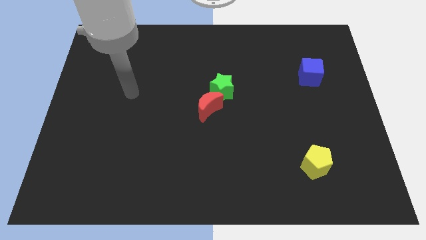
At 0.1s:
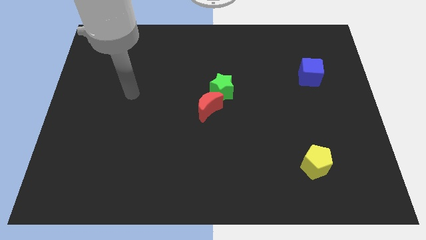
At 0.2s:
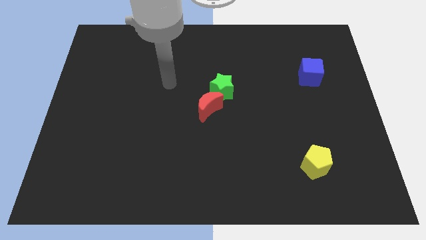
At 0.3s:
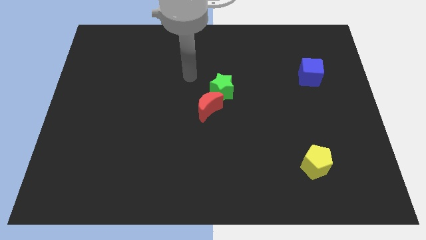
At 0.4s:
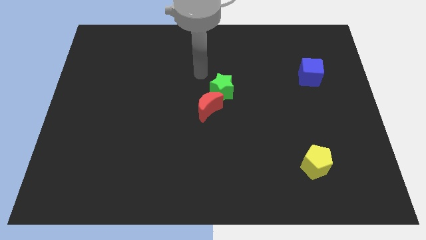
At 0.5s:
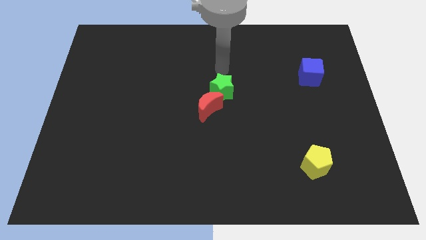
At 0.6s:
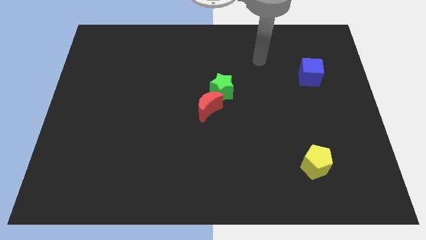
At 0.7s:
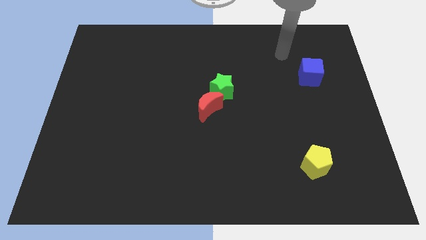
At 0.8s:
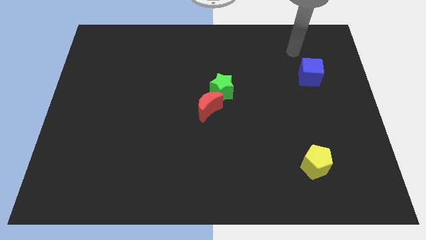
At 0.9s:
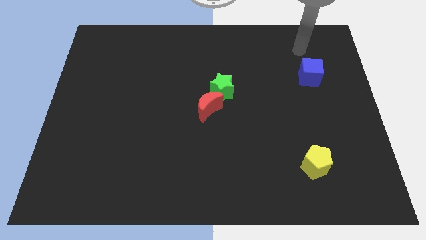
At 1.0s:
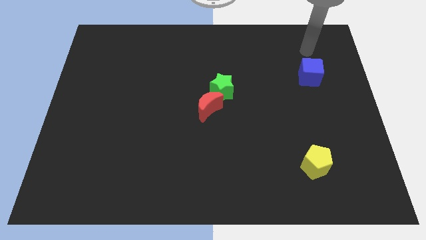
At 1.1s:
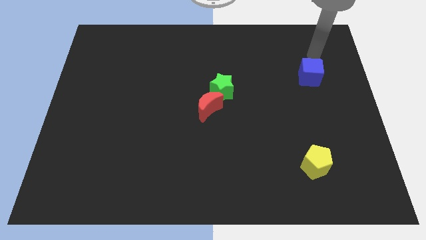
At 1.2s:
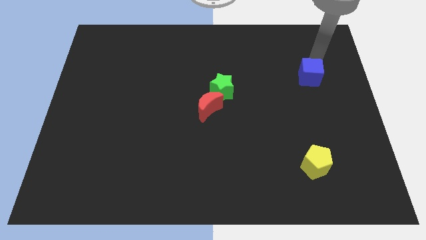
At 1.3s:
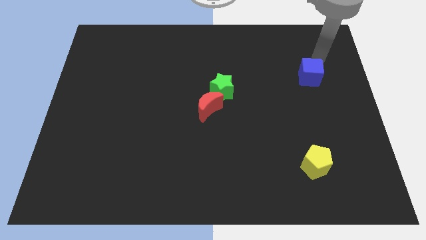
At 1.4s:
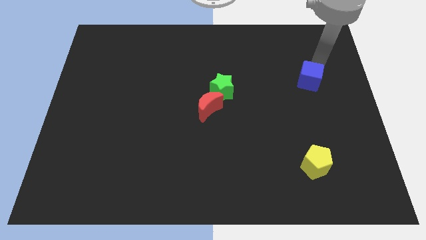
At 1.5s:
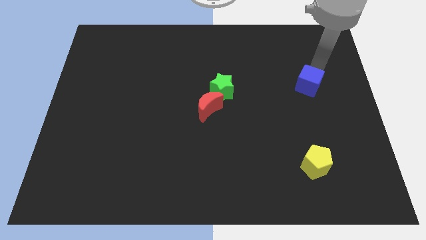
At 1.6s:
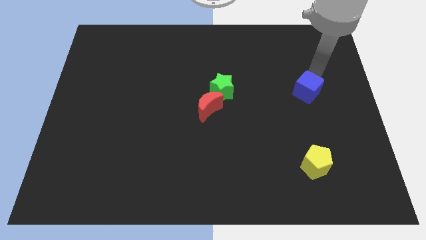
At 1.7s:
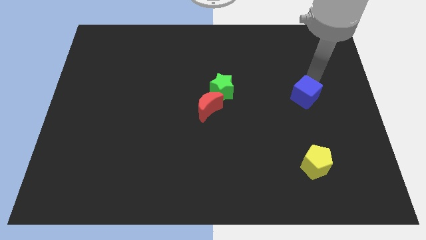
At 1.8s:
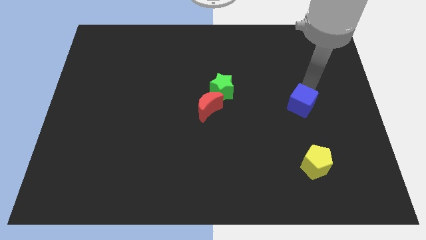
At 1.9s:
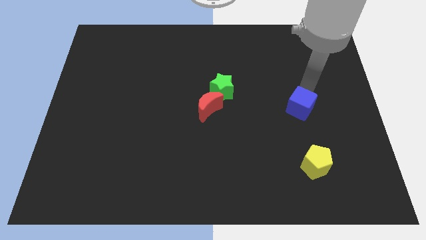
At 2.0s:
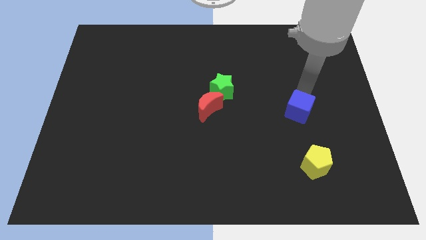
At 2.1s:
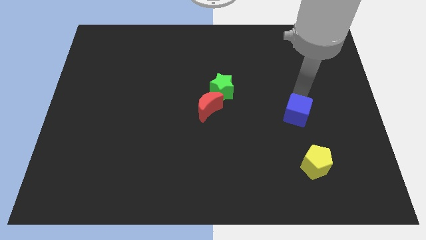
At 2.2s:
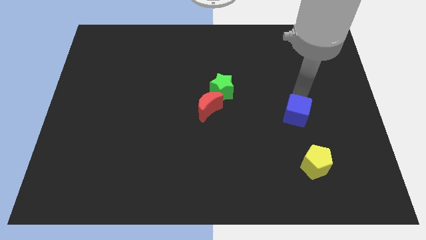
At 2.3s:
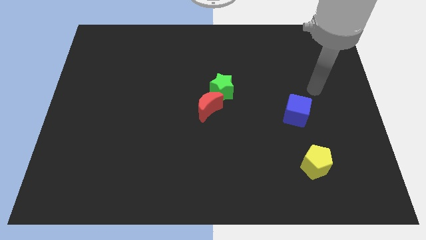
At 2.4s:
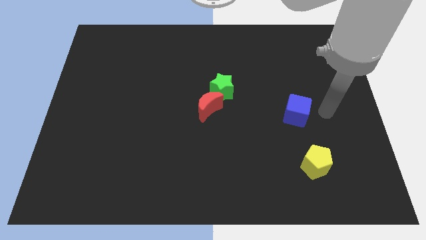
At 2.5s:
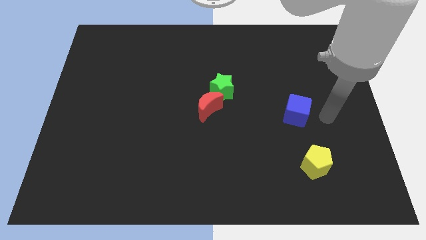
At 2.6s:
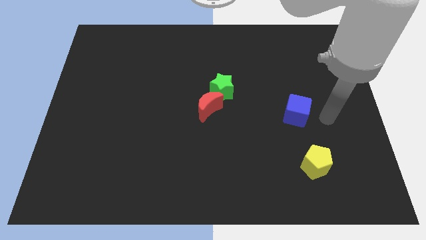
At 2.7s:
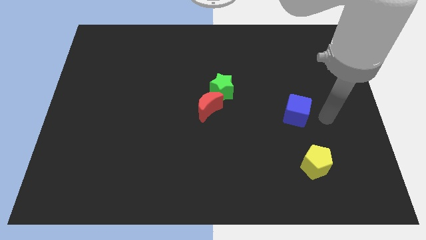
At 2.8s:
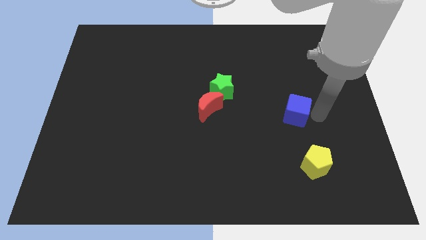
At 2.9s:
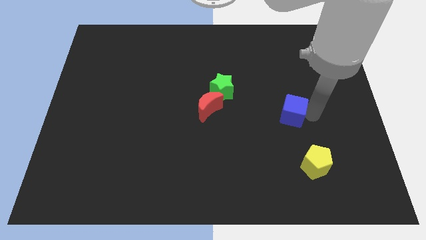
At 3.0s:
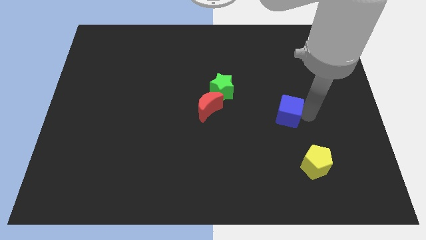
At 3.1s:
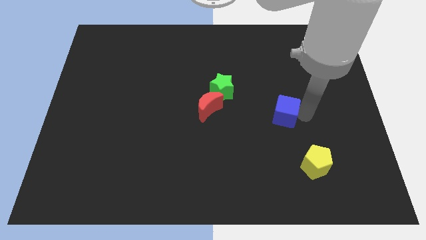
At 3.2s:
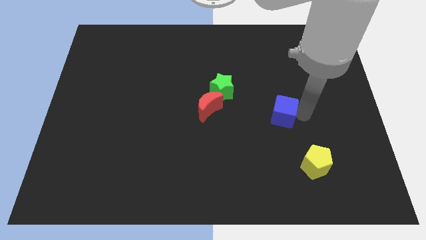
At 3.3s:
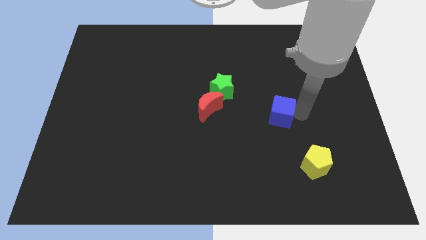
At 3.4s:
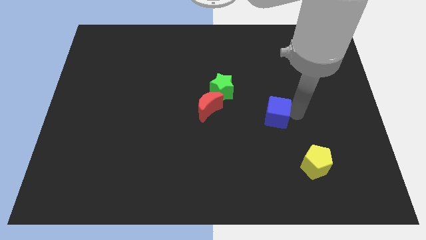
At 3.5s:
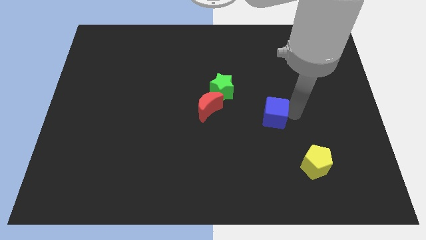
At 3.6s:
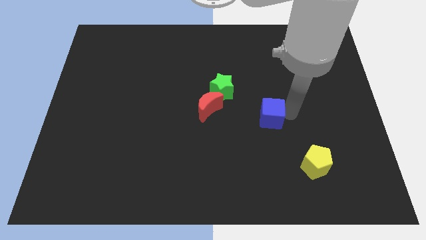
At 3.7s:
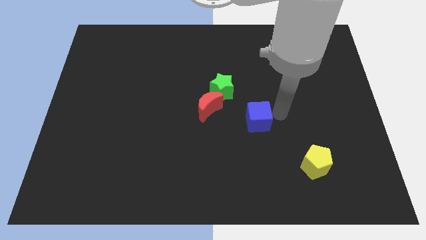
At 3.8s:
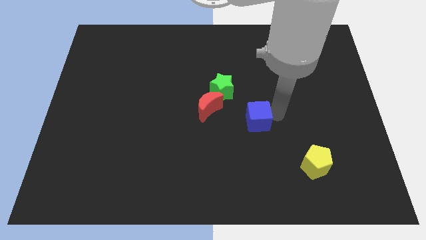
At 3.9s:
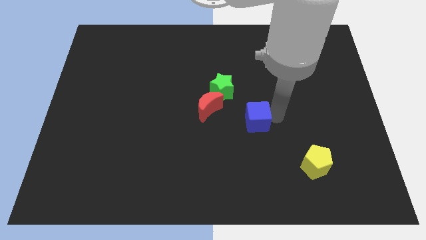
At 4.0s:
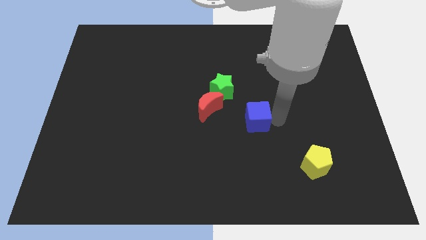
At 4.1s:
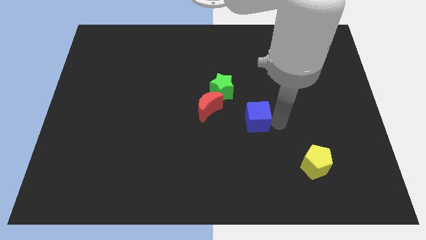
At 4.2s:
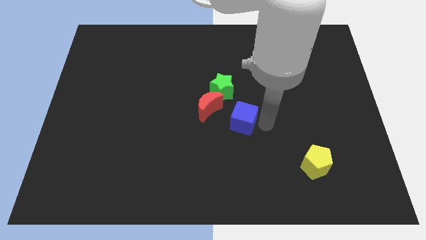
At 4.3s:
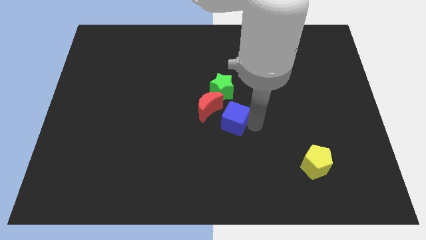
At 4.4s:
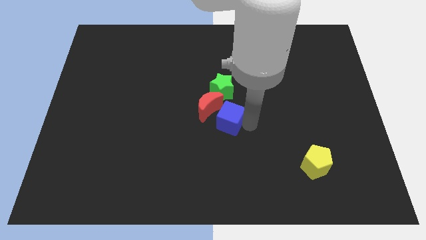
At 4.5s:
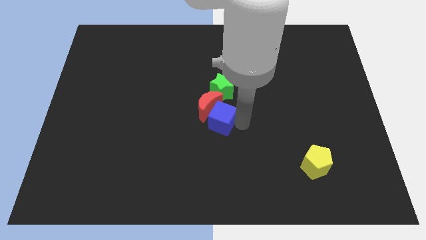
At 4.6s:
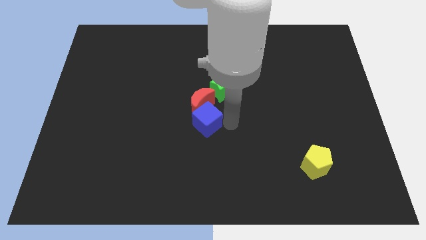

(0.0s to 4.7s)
slide the blue block next to the moon

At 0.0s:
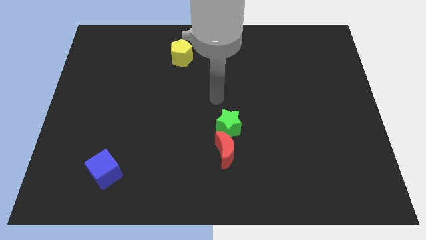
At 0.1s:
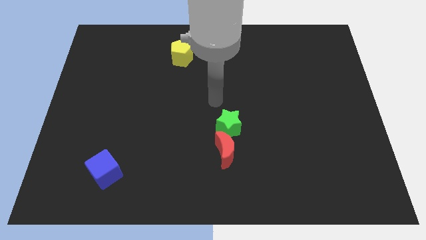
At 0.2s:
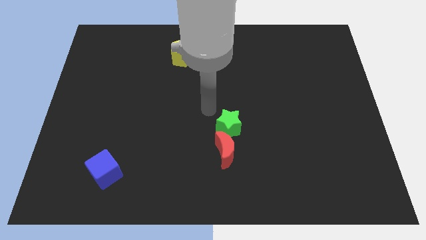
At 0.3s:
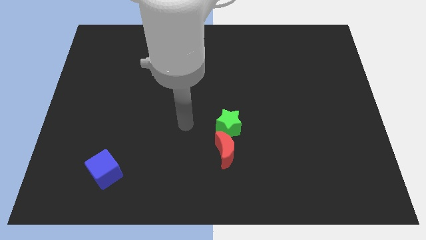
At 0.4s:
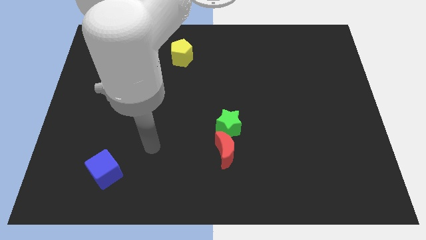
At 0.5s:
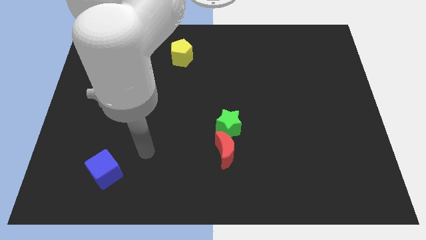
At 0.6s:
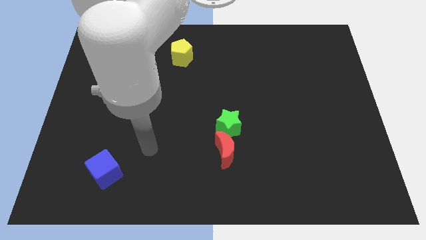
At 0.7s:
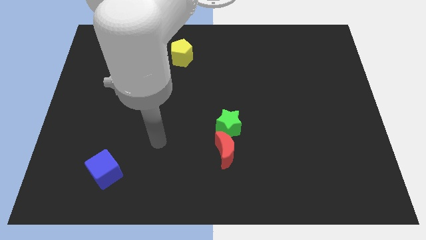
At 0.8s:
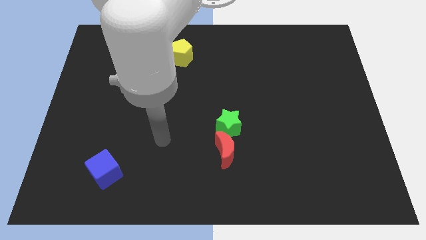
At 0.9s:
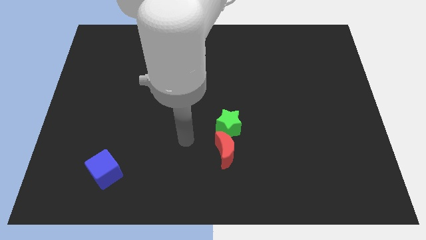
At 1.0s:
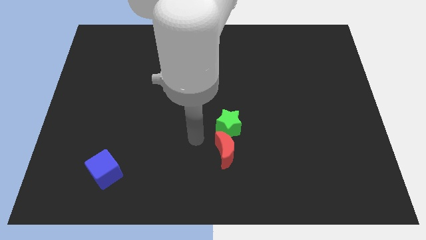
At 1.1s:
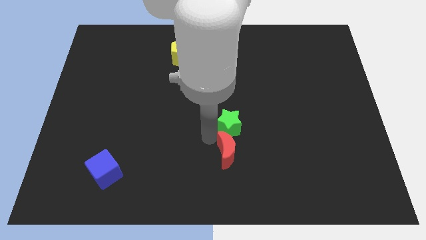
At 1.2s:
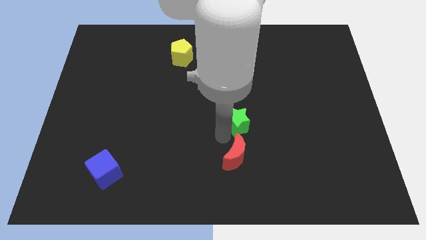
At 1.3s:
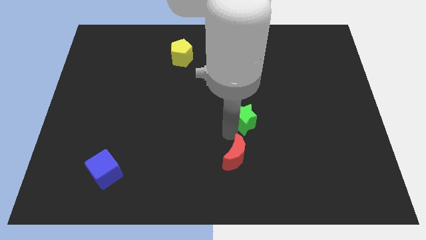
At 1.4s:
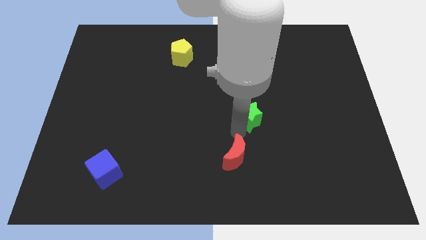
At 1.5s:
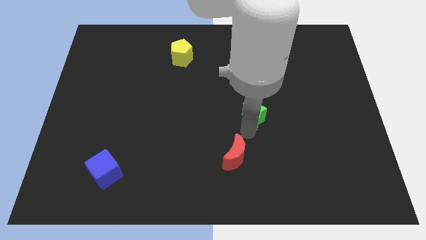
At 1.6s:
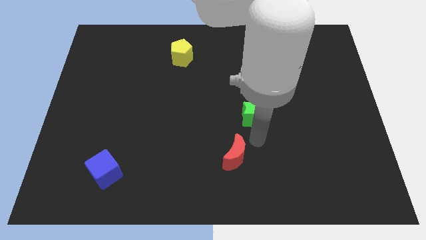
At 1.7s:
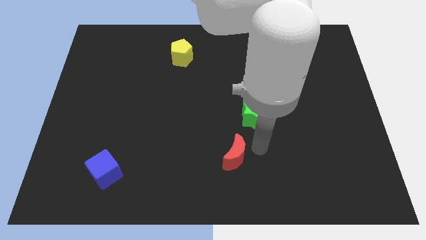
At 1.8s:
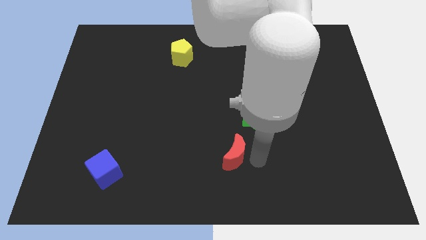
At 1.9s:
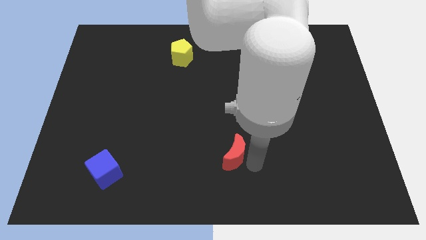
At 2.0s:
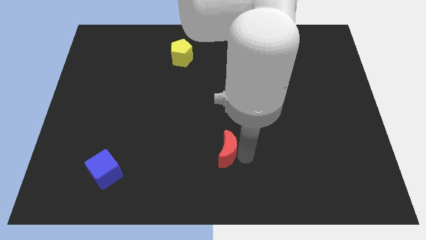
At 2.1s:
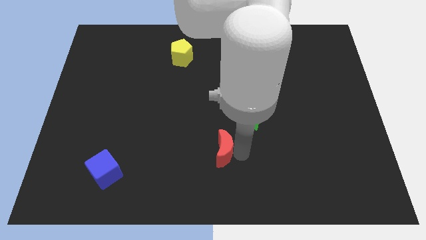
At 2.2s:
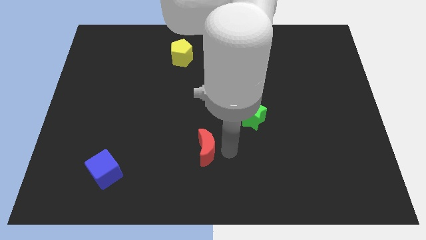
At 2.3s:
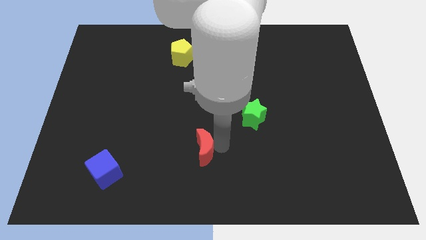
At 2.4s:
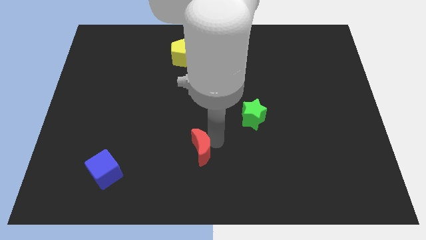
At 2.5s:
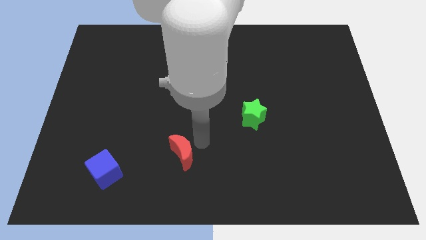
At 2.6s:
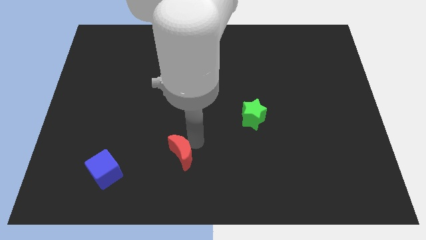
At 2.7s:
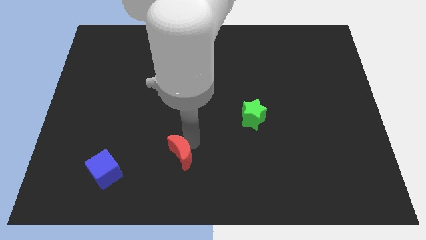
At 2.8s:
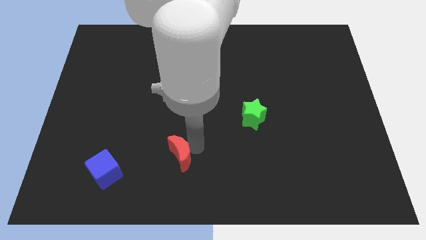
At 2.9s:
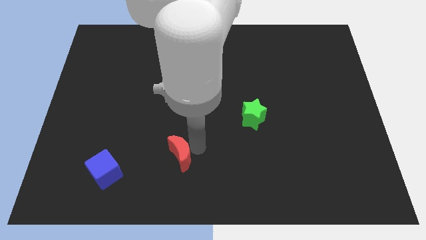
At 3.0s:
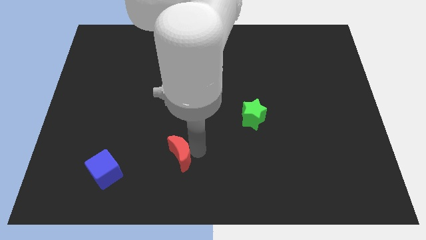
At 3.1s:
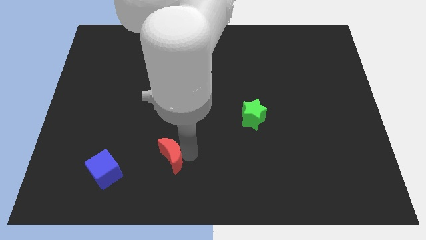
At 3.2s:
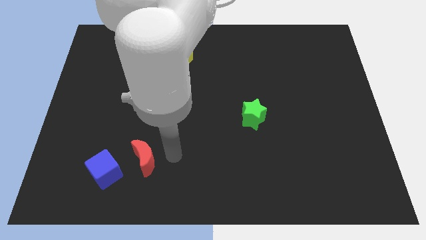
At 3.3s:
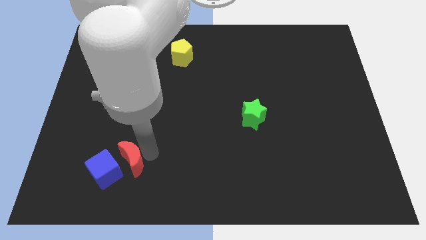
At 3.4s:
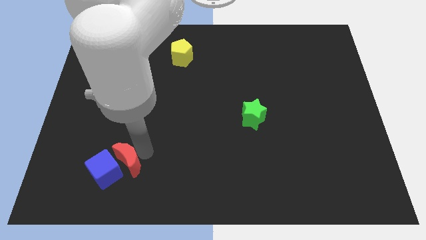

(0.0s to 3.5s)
move the red moon close to the cube

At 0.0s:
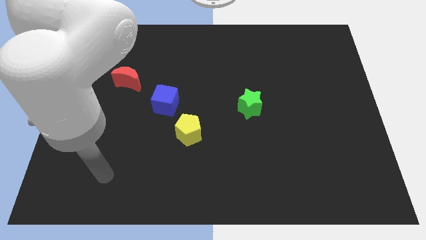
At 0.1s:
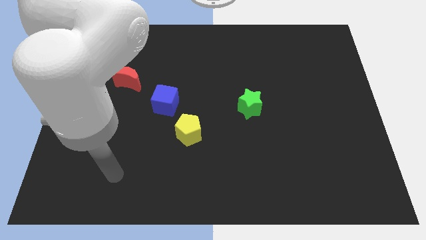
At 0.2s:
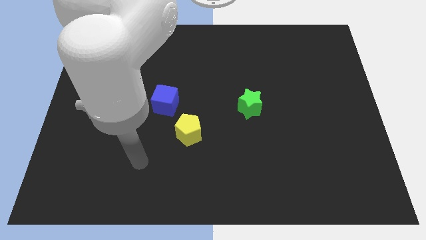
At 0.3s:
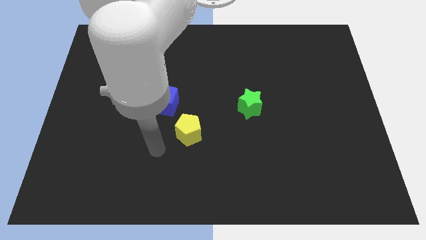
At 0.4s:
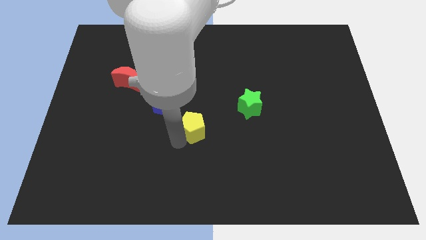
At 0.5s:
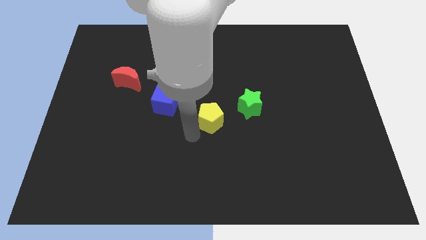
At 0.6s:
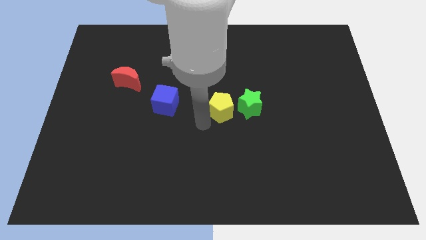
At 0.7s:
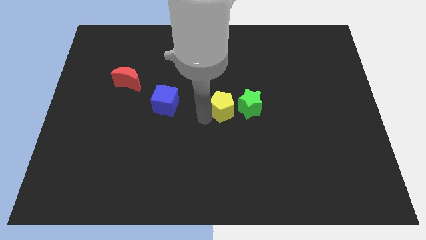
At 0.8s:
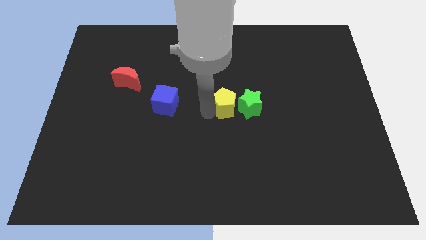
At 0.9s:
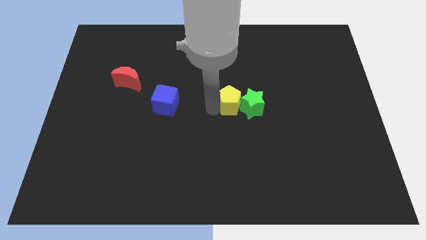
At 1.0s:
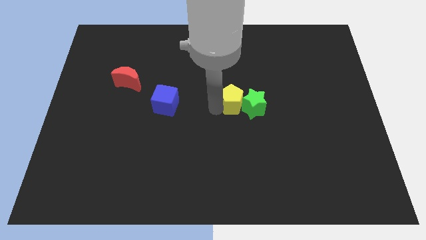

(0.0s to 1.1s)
move the yellow pentagon towards the star
